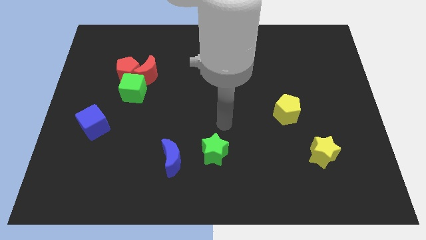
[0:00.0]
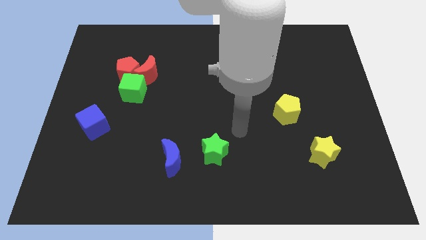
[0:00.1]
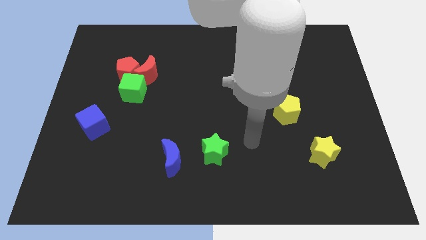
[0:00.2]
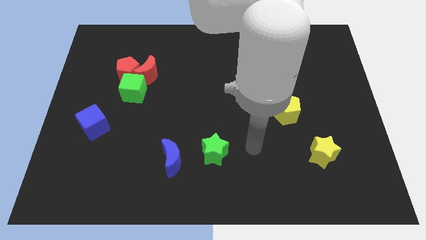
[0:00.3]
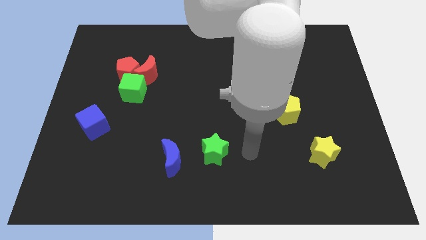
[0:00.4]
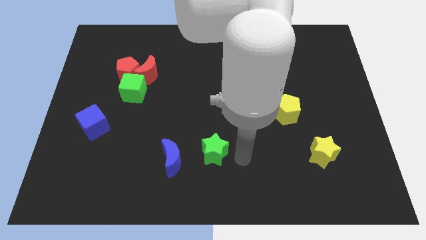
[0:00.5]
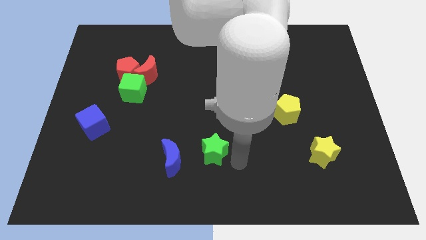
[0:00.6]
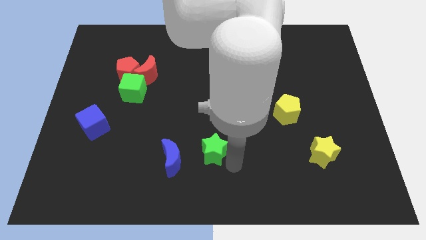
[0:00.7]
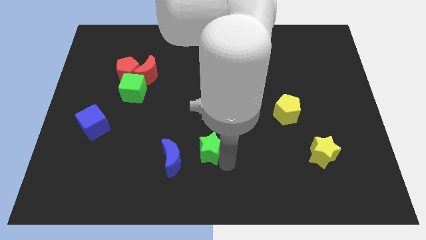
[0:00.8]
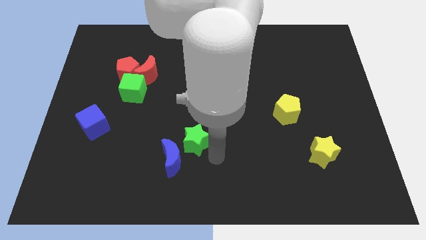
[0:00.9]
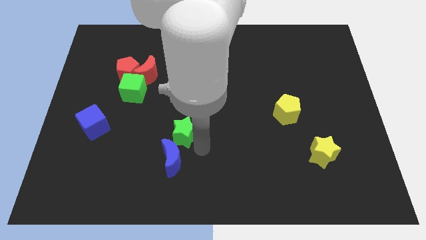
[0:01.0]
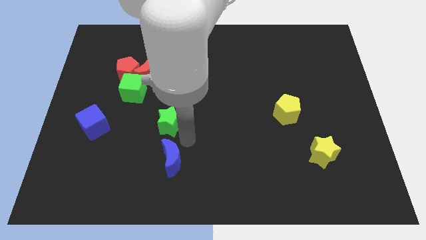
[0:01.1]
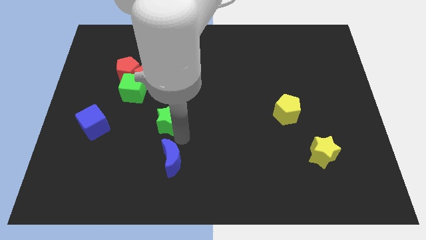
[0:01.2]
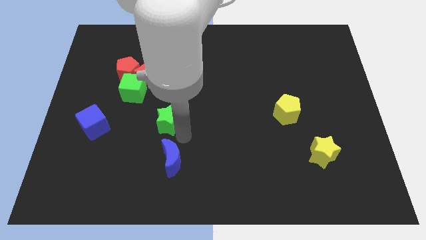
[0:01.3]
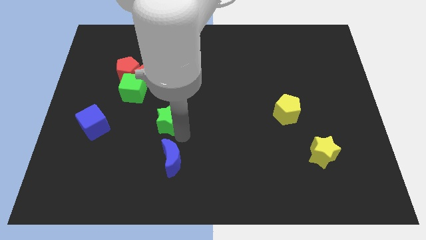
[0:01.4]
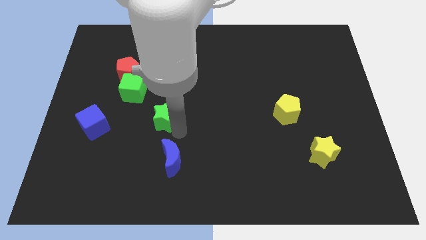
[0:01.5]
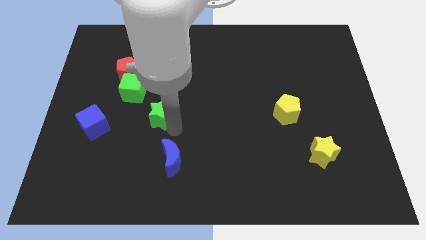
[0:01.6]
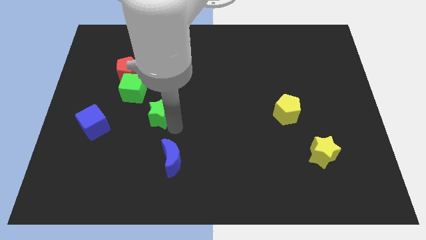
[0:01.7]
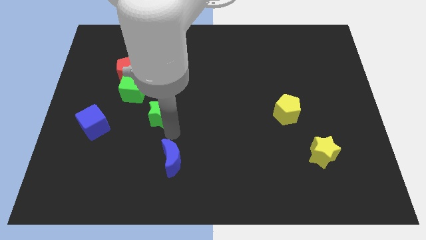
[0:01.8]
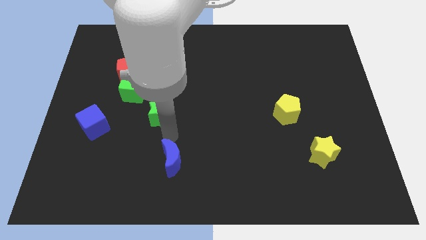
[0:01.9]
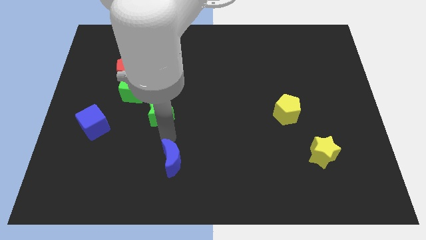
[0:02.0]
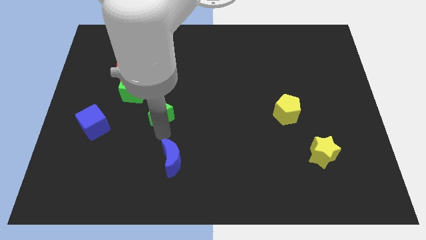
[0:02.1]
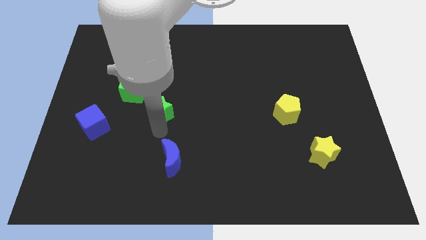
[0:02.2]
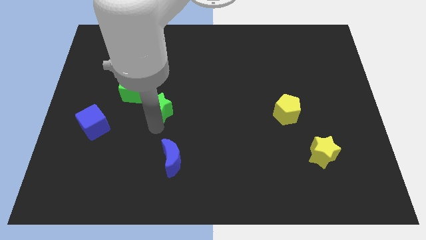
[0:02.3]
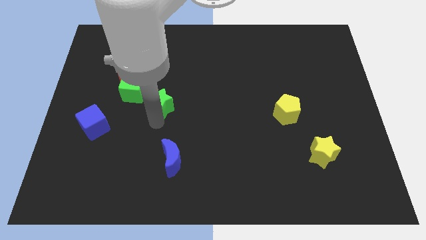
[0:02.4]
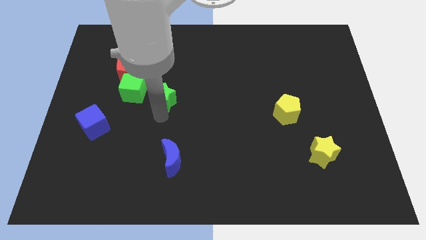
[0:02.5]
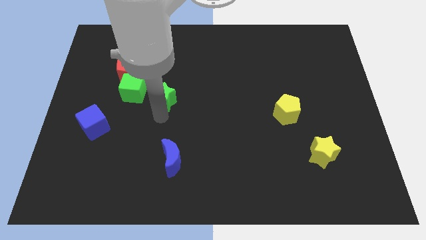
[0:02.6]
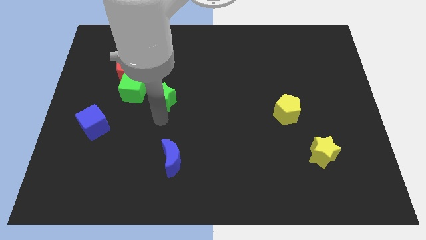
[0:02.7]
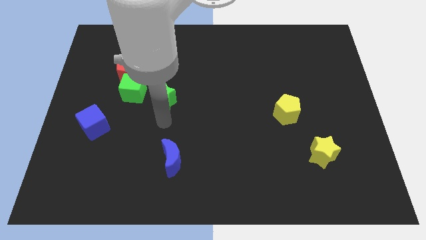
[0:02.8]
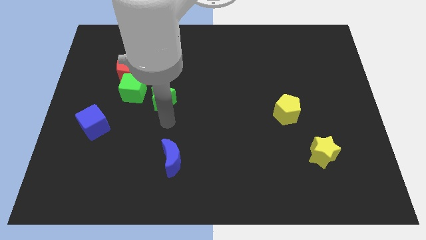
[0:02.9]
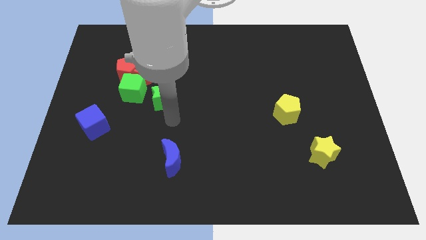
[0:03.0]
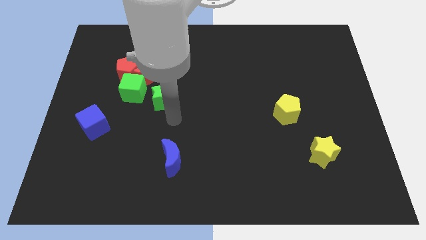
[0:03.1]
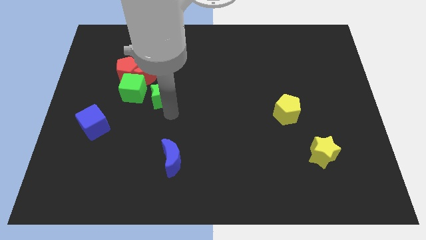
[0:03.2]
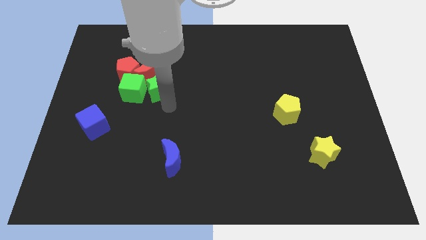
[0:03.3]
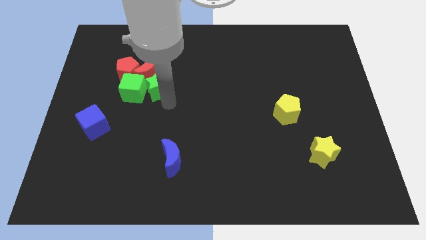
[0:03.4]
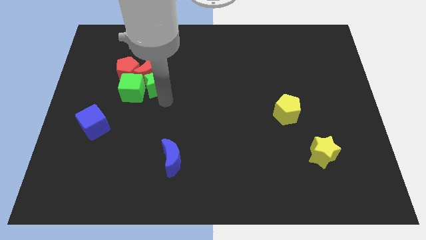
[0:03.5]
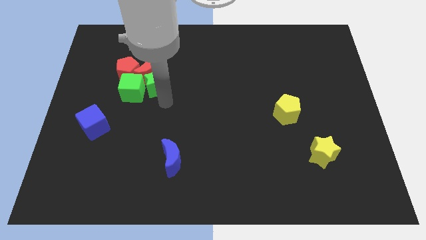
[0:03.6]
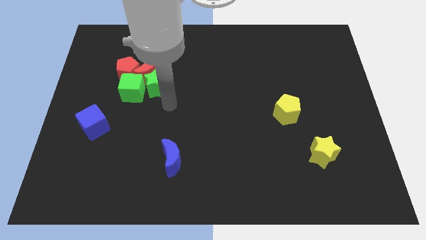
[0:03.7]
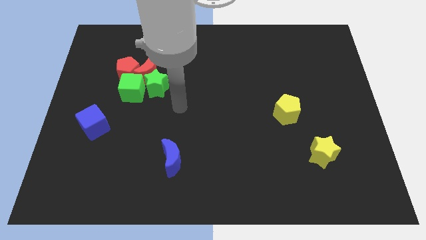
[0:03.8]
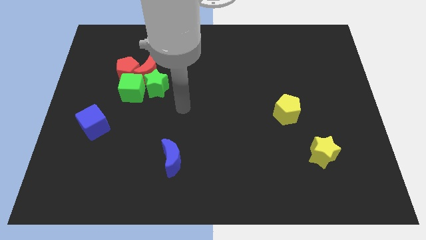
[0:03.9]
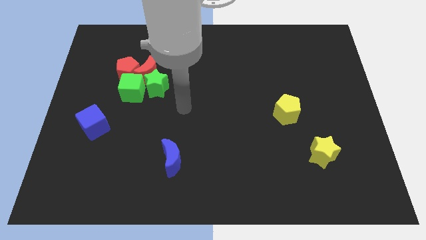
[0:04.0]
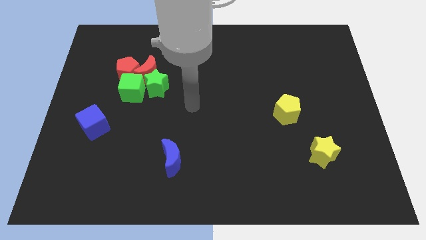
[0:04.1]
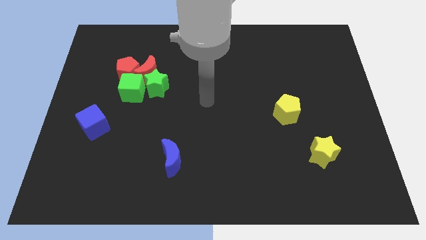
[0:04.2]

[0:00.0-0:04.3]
move green star below red moon

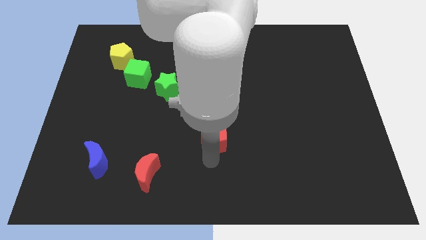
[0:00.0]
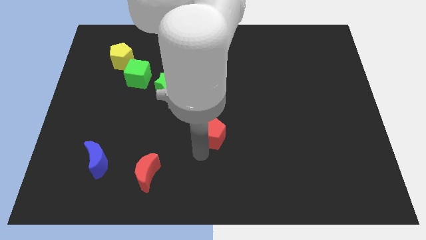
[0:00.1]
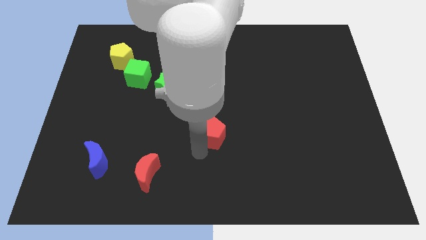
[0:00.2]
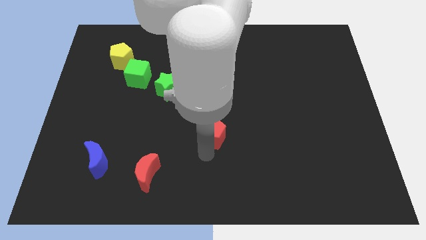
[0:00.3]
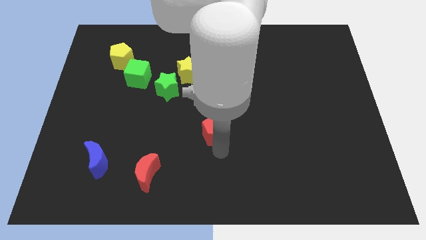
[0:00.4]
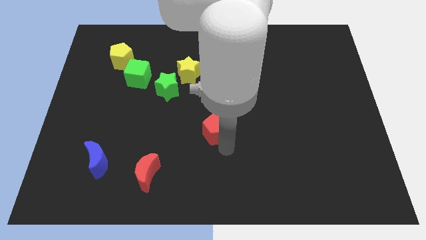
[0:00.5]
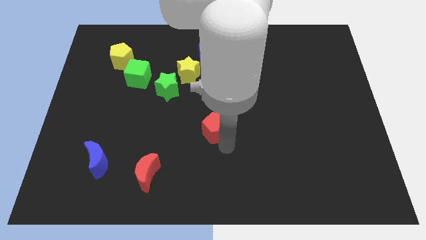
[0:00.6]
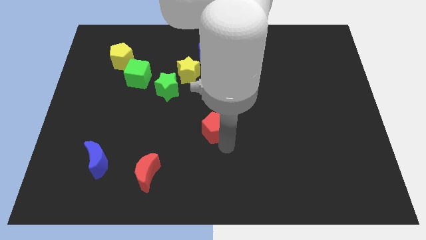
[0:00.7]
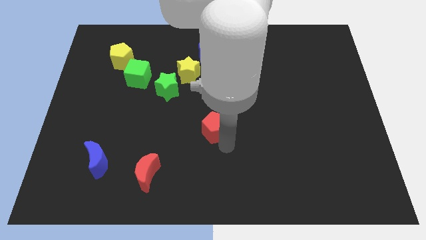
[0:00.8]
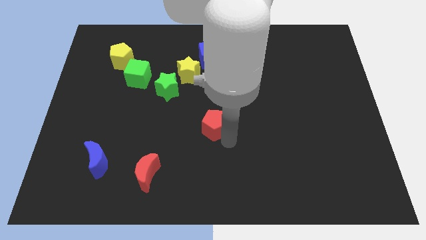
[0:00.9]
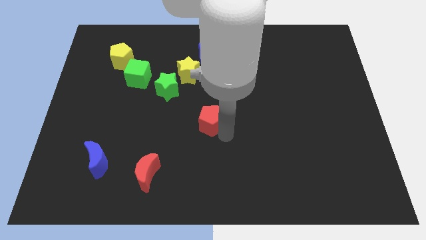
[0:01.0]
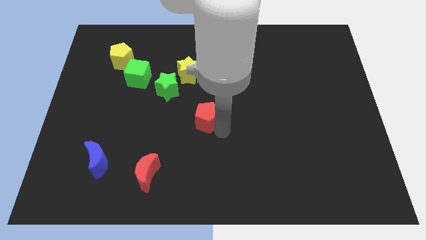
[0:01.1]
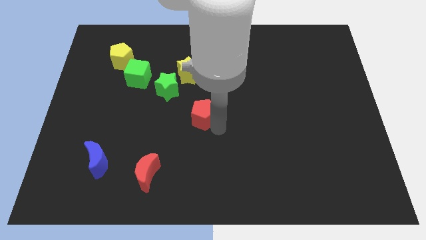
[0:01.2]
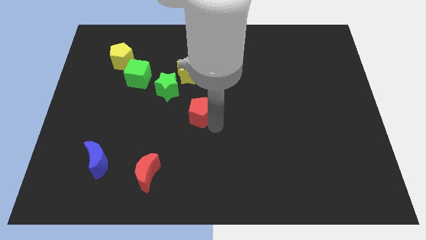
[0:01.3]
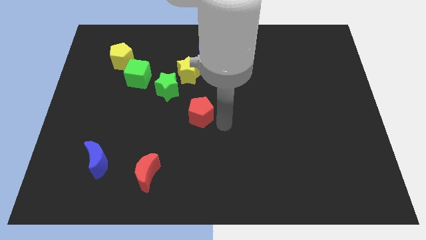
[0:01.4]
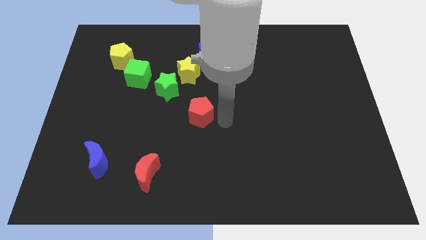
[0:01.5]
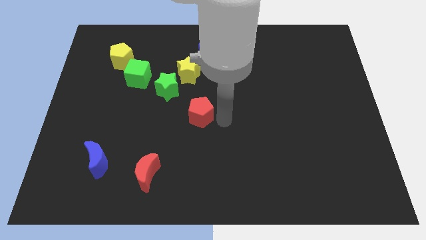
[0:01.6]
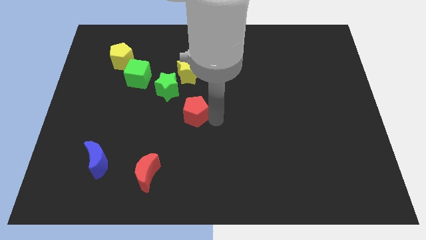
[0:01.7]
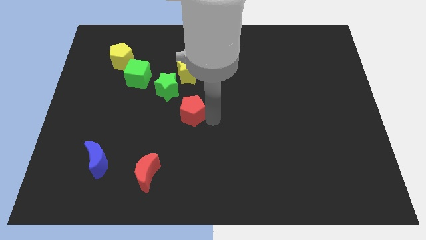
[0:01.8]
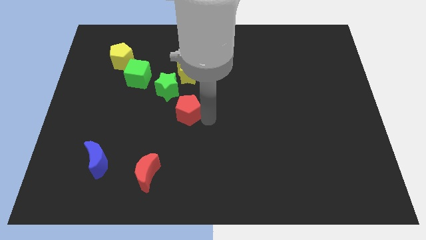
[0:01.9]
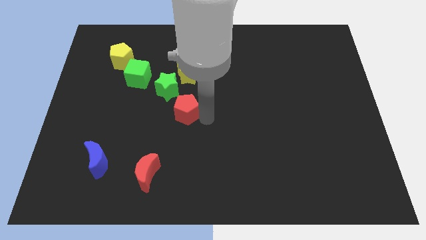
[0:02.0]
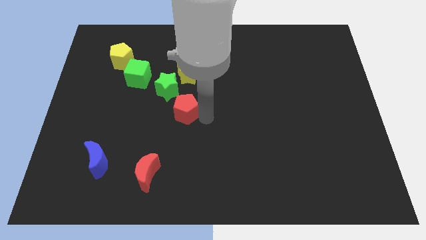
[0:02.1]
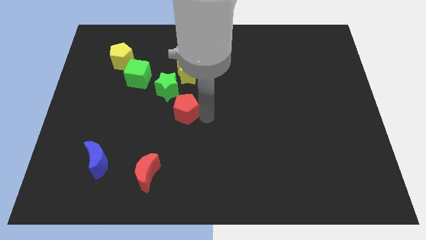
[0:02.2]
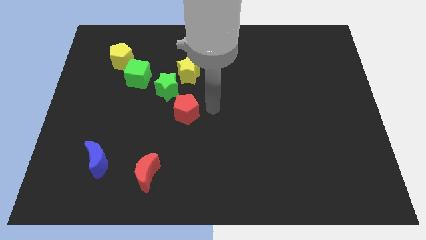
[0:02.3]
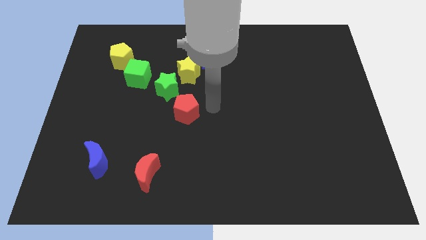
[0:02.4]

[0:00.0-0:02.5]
put the red pentagon at the bottom right side of the green star

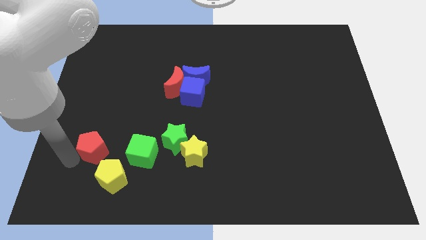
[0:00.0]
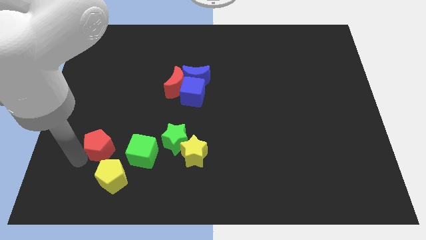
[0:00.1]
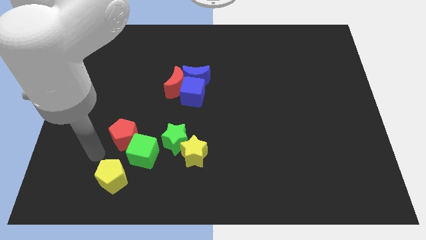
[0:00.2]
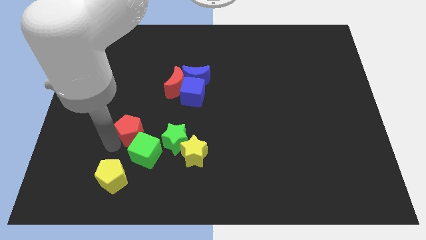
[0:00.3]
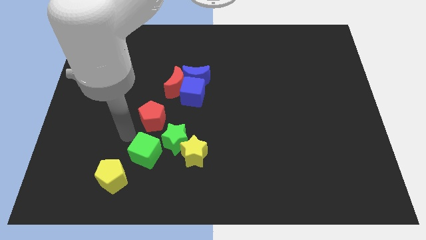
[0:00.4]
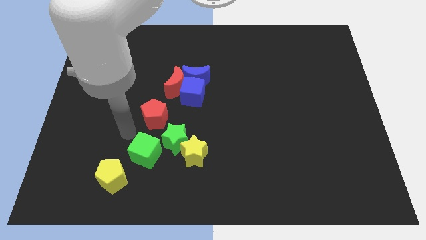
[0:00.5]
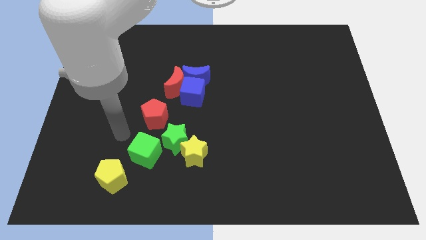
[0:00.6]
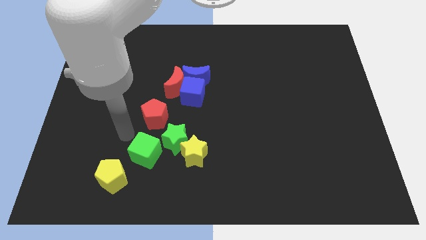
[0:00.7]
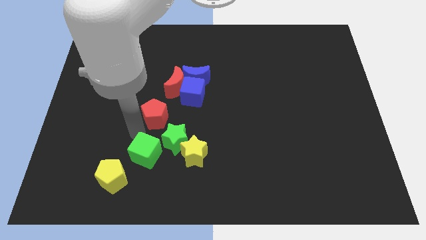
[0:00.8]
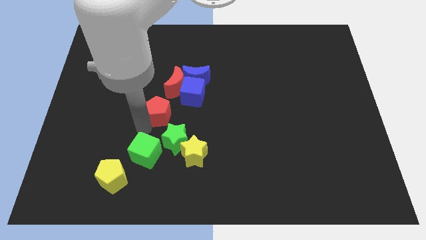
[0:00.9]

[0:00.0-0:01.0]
place the red pentagon above the green blocks

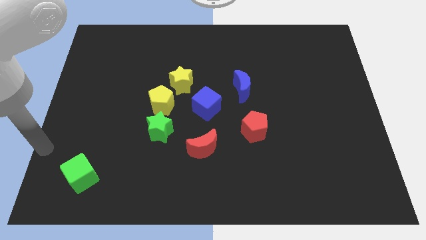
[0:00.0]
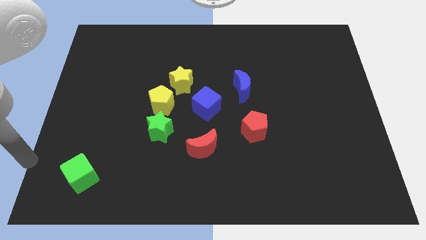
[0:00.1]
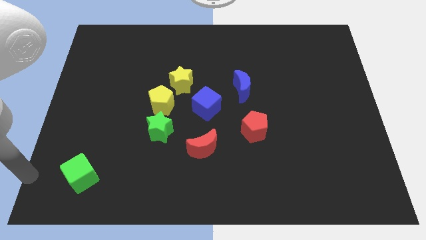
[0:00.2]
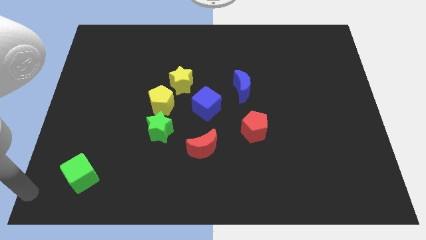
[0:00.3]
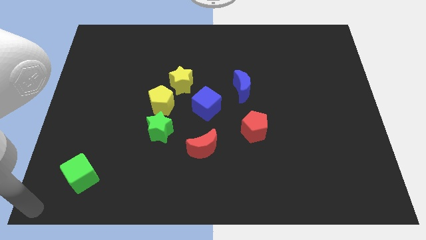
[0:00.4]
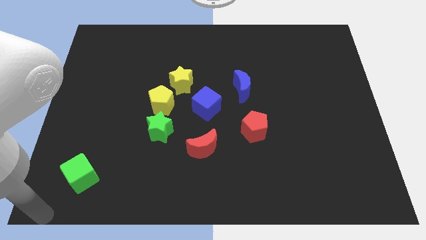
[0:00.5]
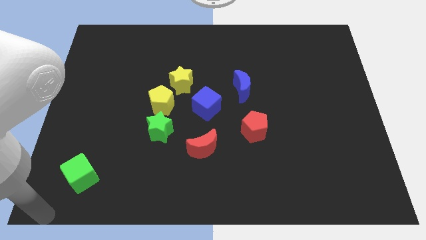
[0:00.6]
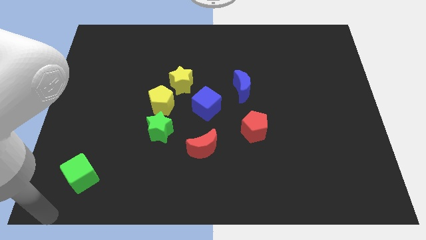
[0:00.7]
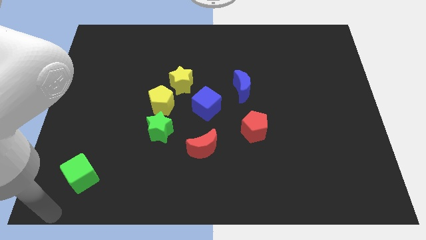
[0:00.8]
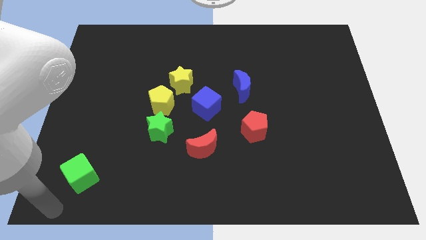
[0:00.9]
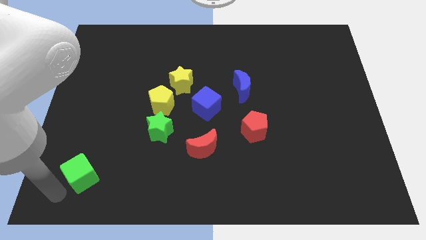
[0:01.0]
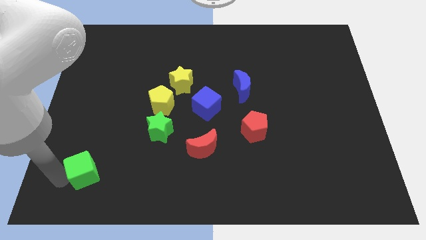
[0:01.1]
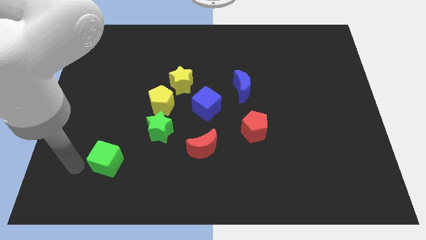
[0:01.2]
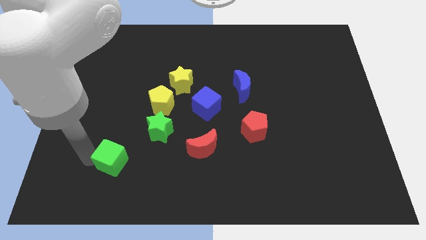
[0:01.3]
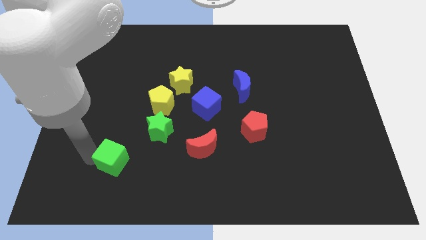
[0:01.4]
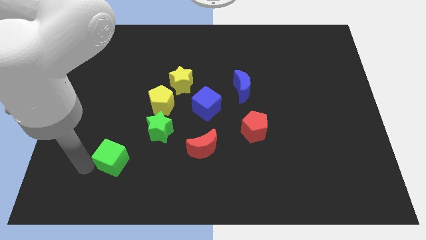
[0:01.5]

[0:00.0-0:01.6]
push the green cube upward
